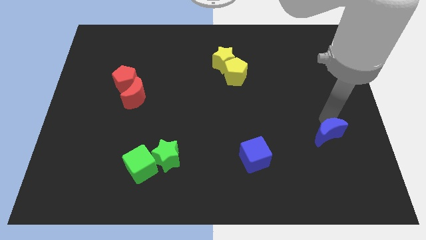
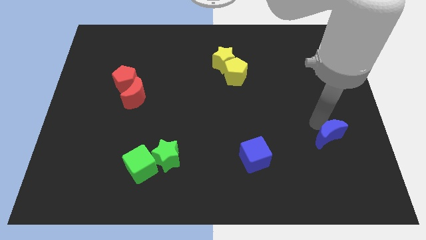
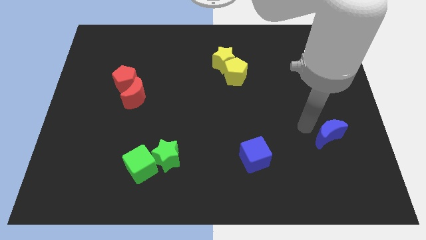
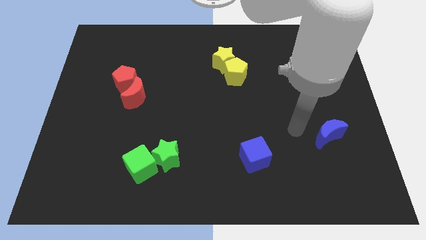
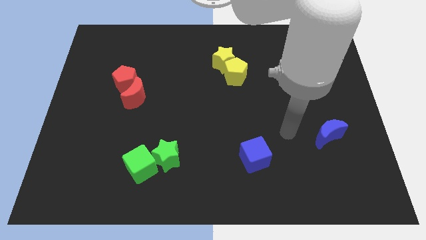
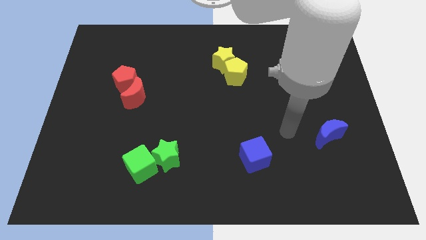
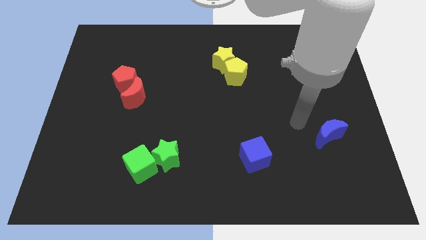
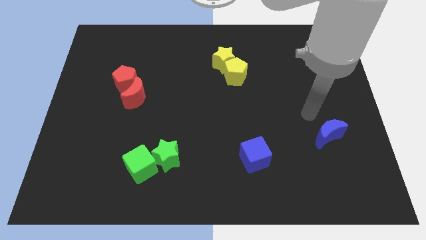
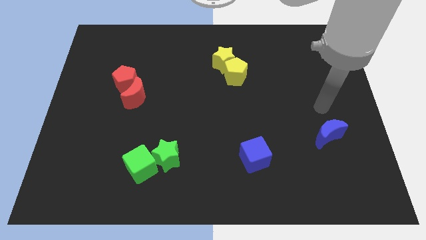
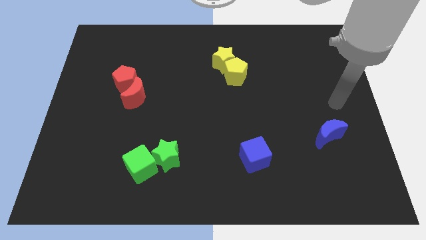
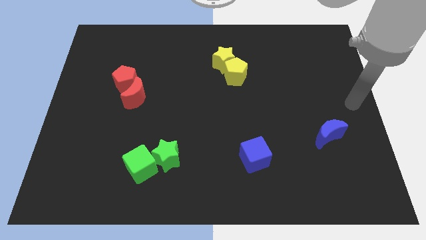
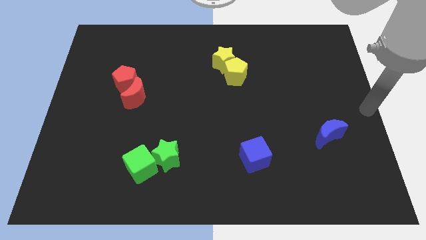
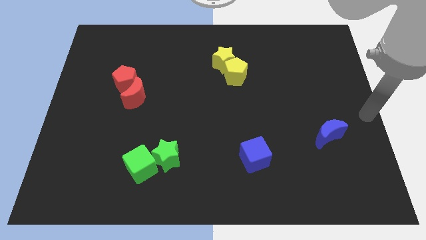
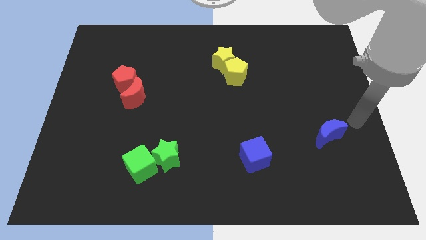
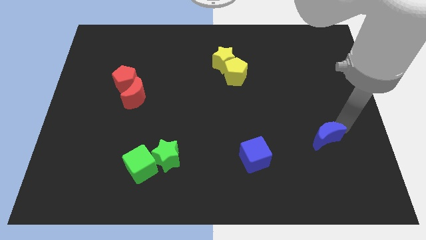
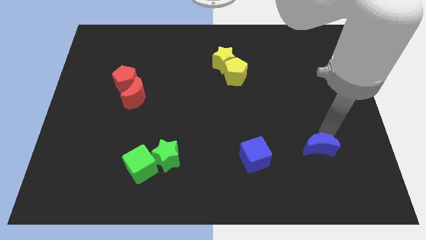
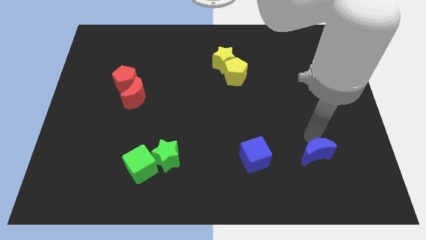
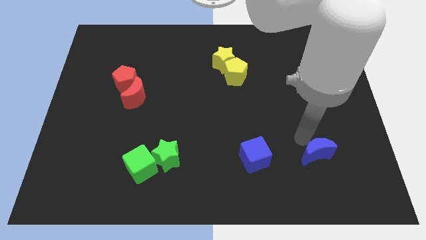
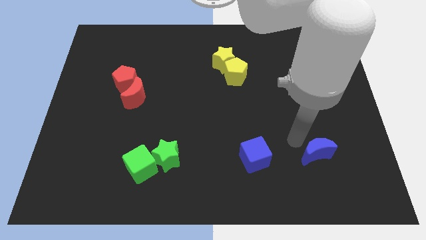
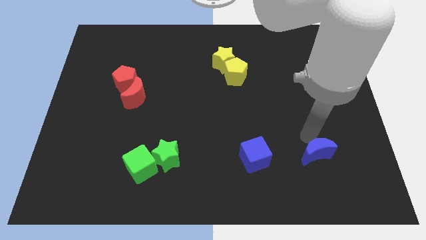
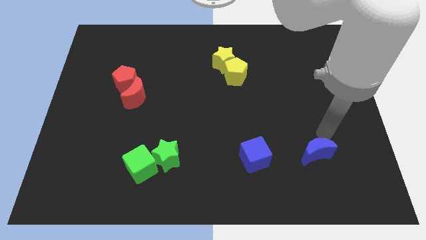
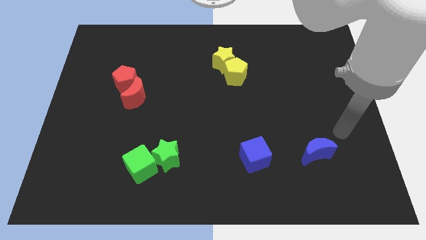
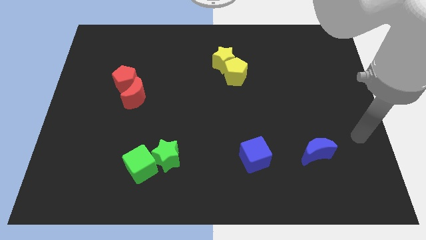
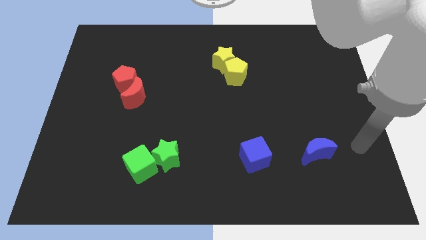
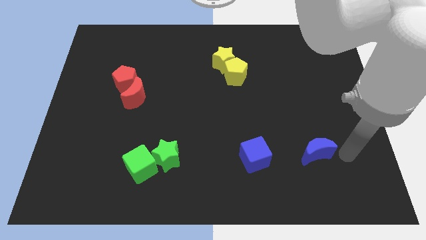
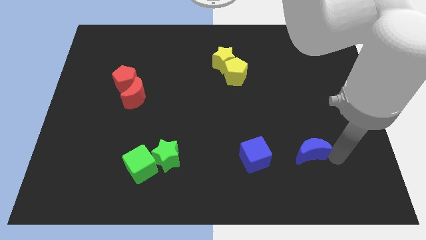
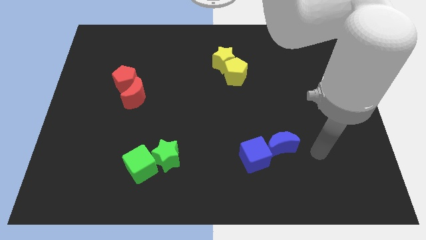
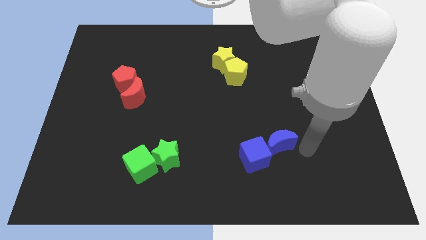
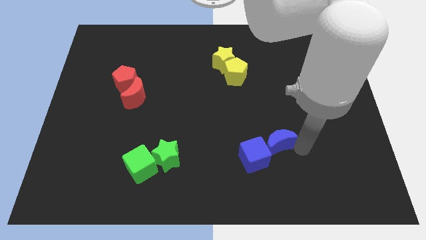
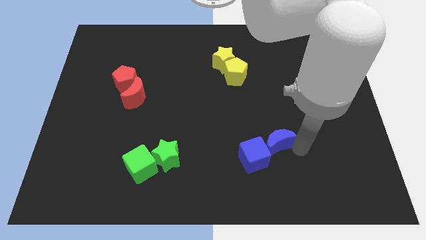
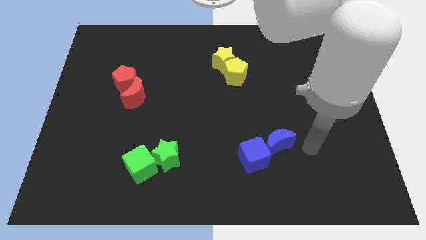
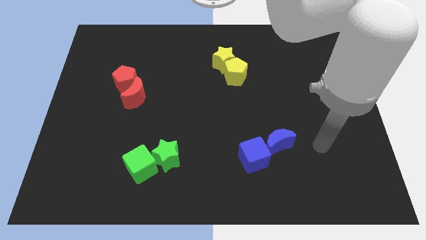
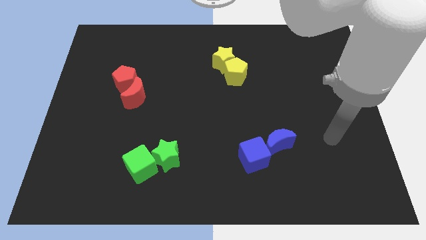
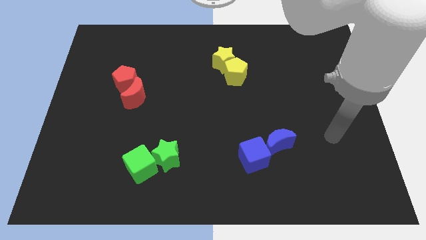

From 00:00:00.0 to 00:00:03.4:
push blue moon close to blue cube

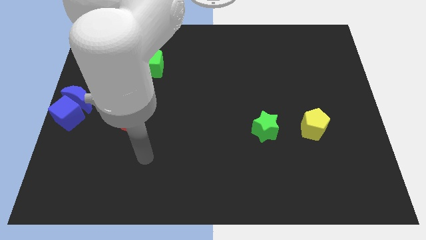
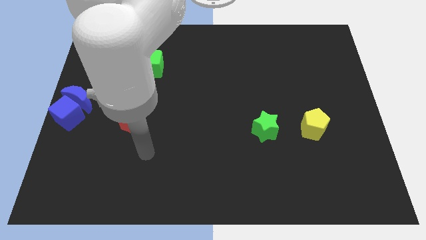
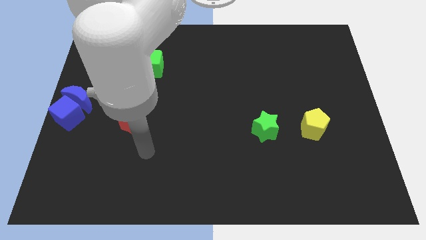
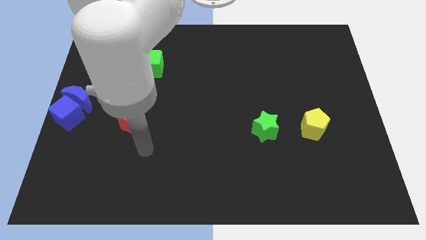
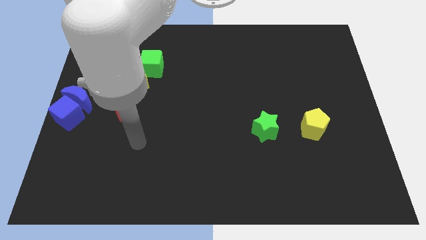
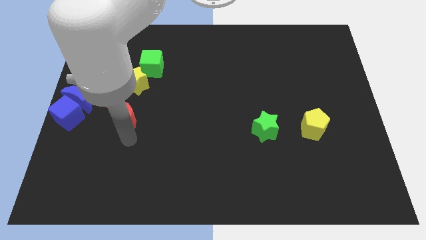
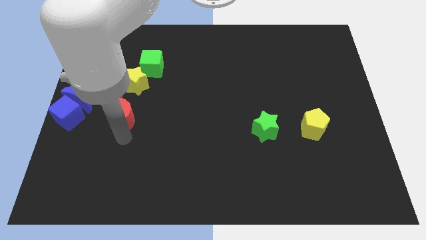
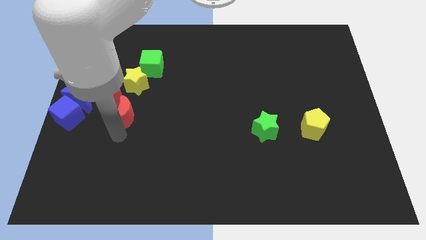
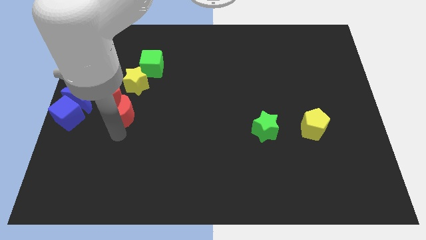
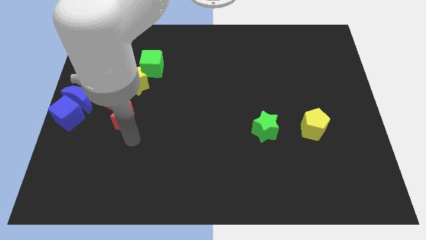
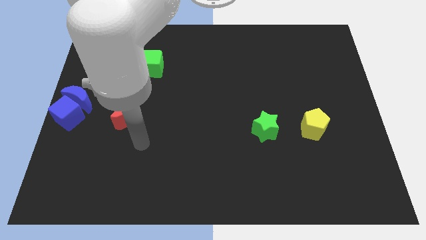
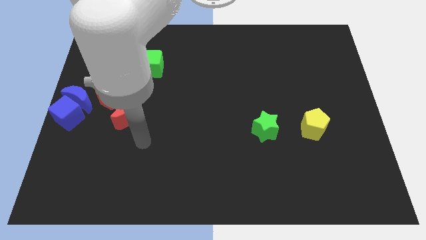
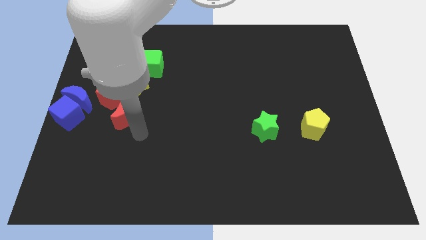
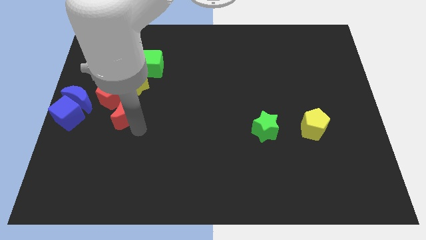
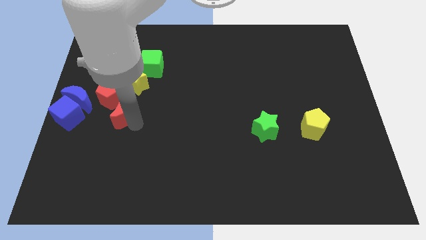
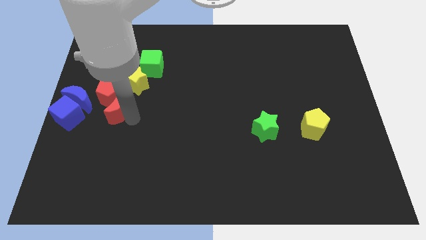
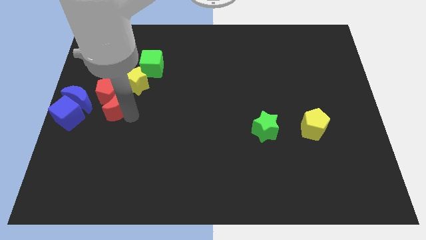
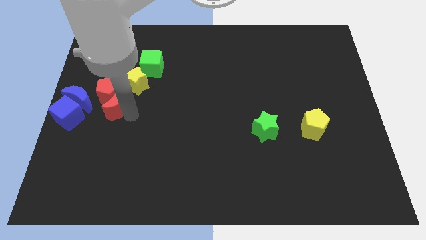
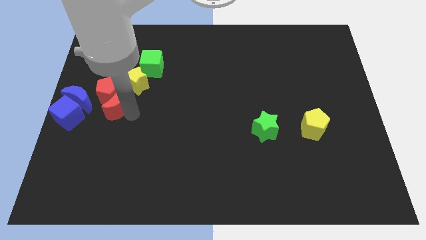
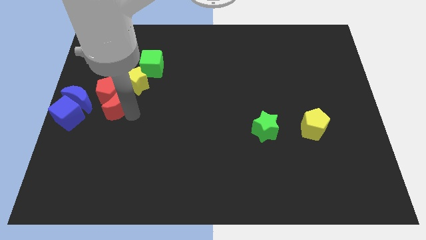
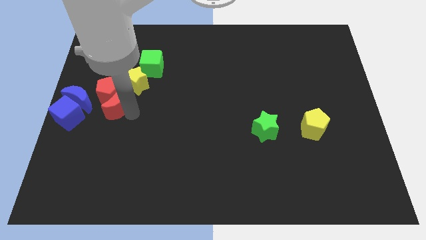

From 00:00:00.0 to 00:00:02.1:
add red moon into red pentagon

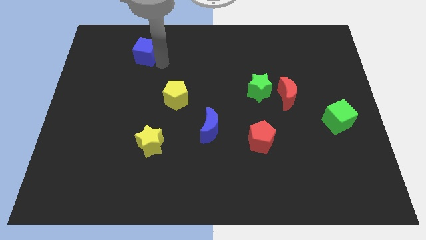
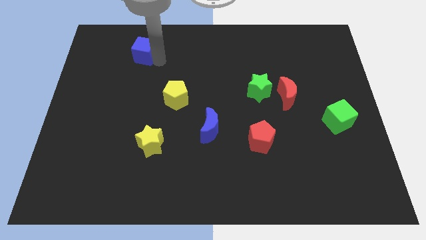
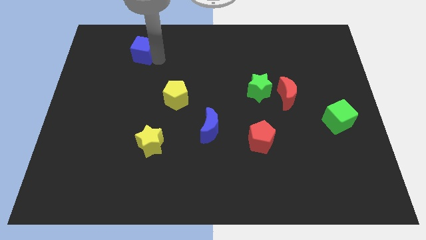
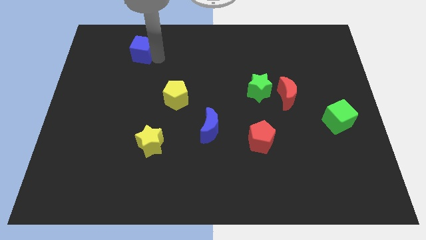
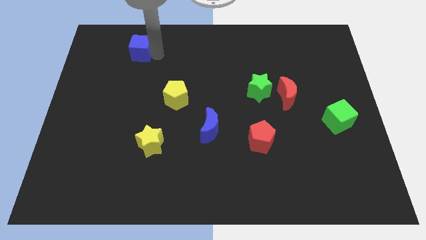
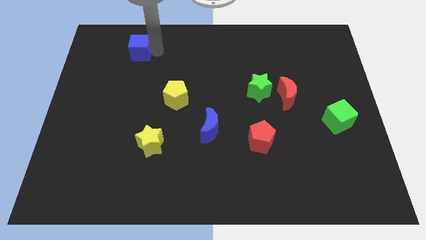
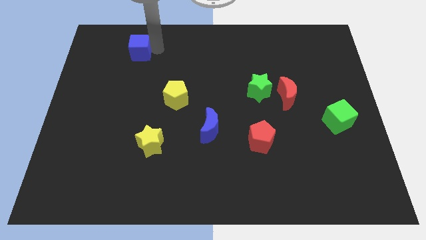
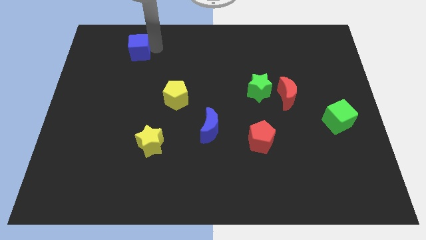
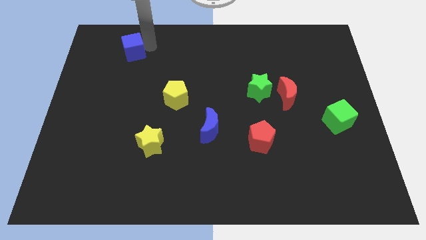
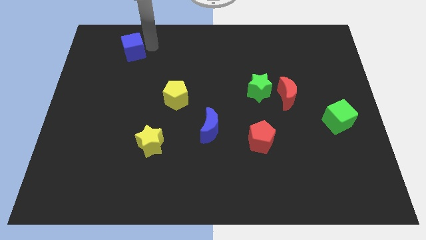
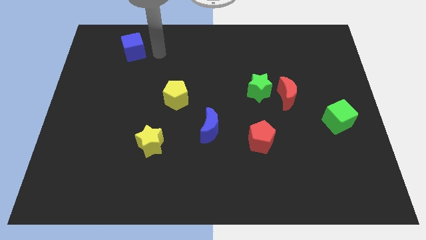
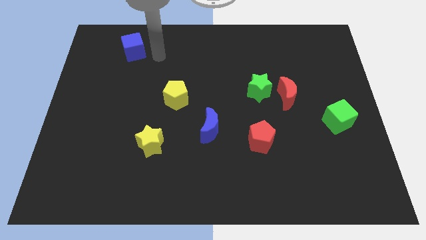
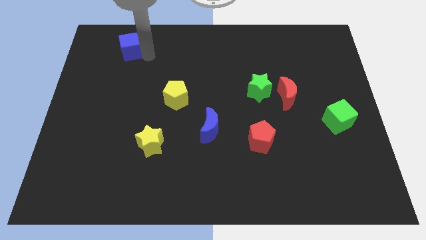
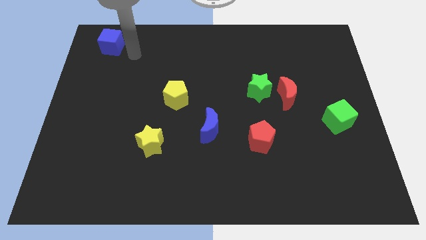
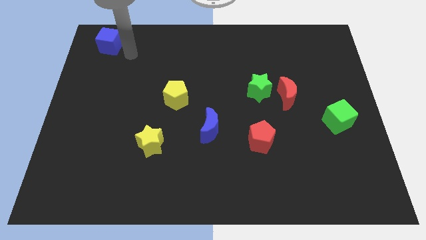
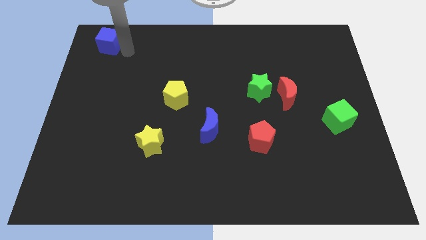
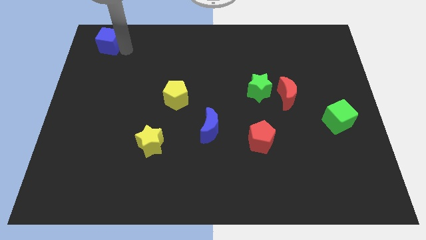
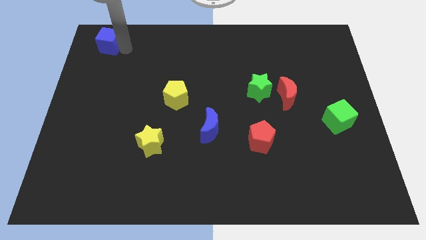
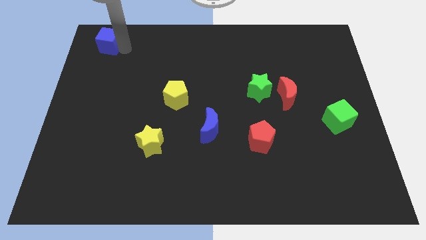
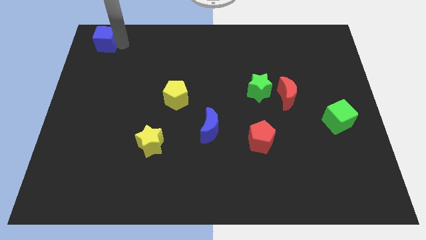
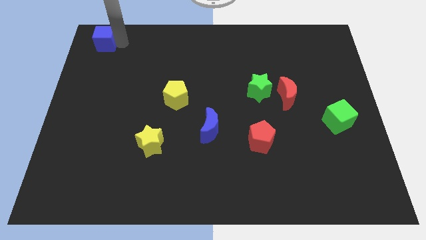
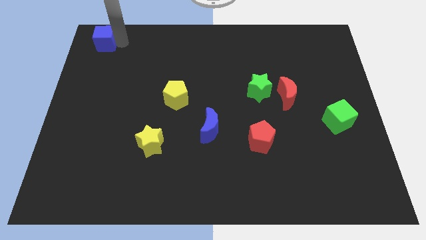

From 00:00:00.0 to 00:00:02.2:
place the blue cube diagonally above the yellow star

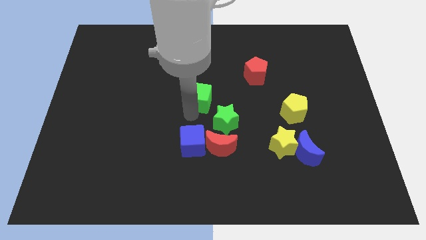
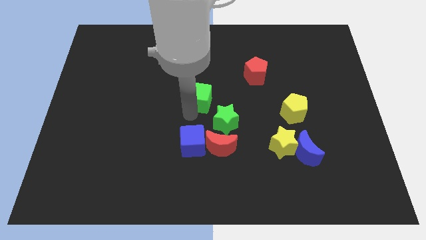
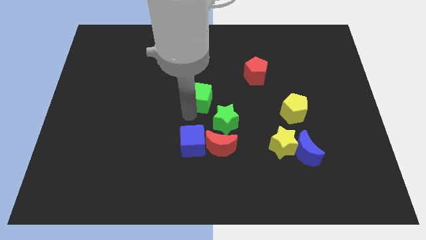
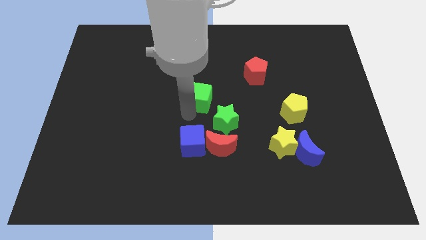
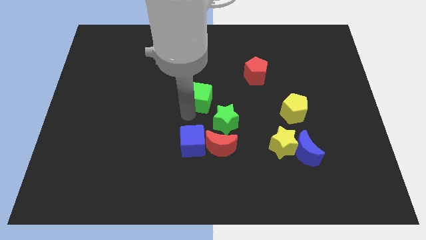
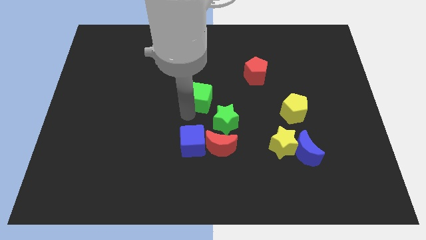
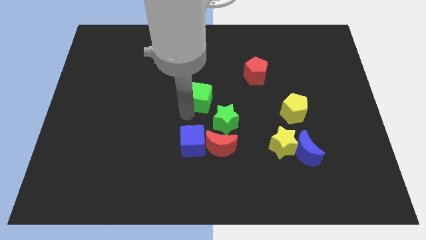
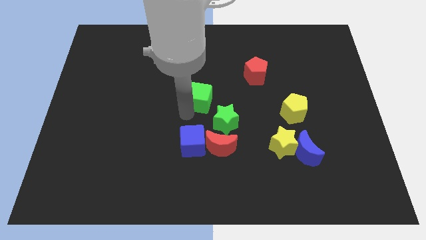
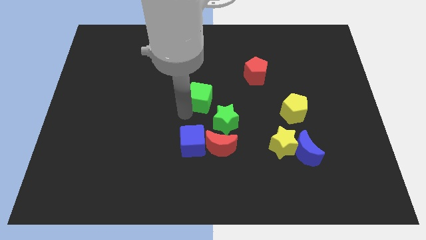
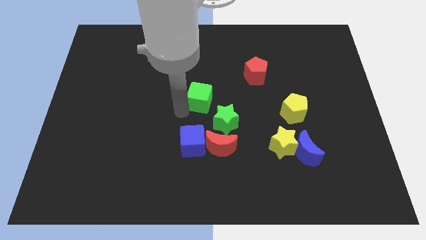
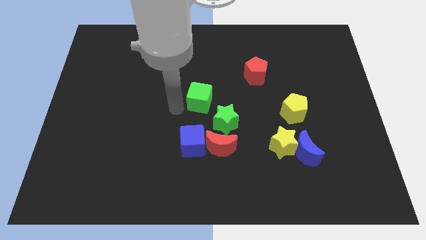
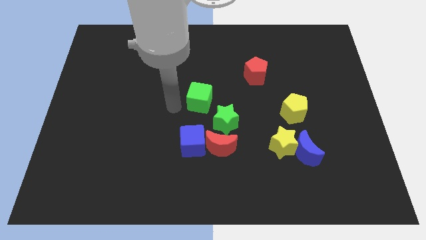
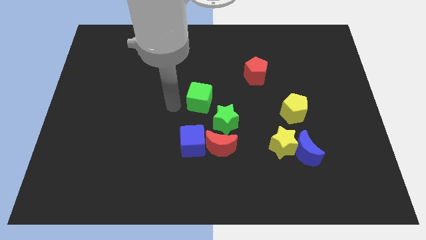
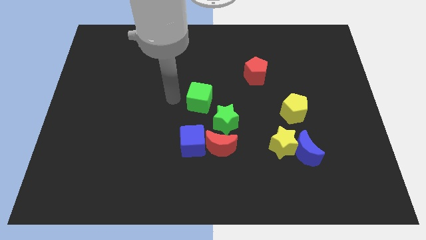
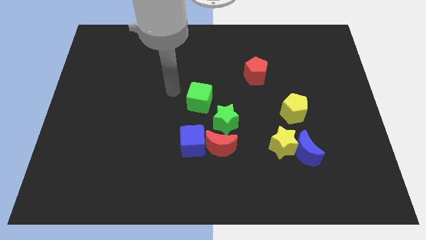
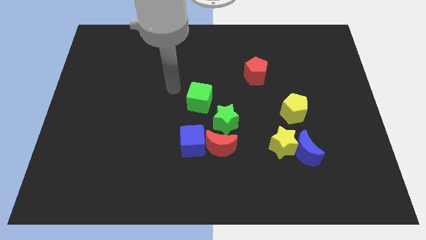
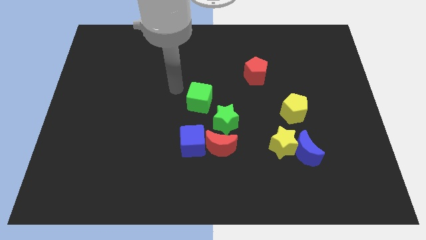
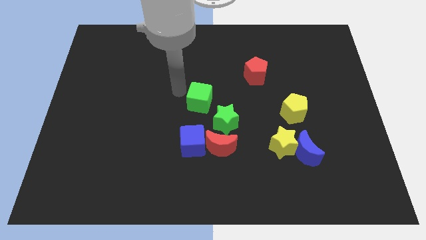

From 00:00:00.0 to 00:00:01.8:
move your arm away from green cube
